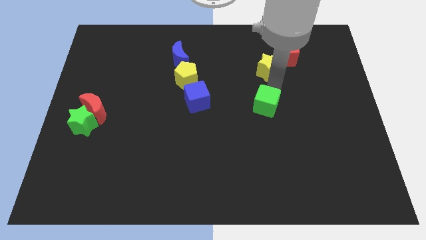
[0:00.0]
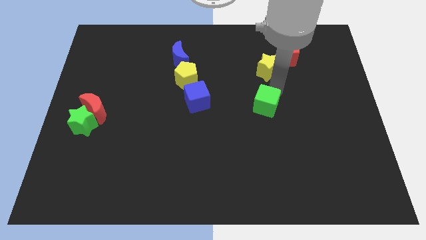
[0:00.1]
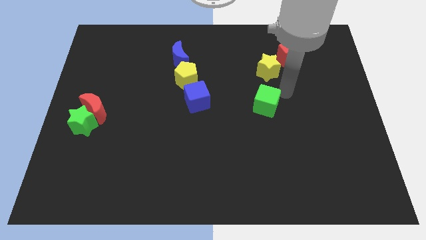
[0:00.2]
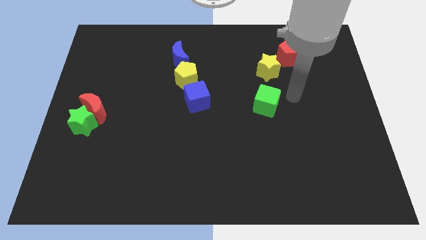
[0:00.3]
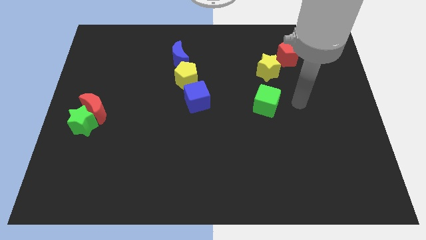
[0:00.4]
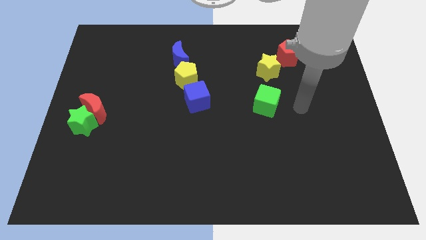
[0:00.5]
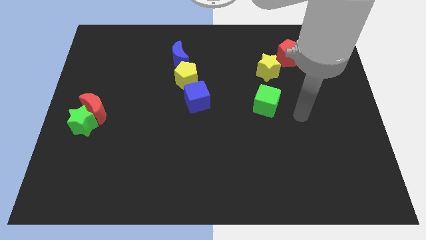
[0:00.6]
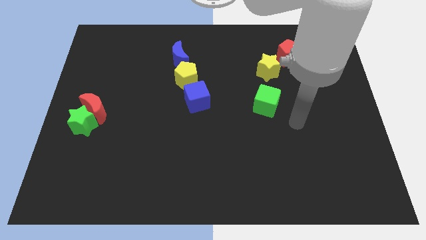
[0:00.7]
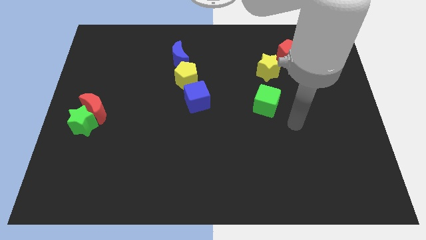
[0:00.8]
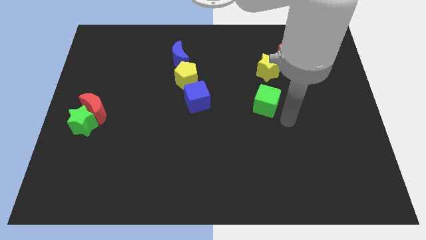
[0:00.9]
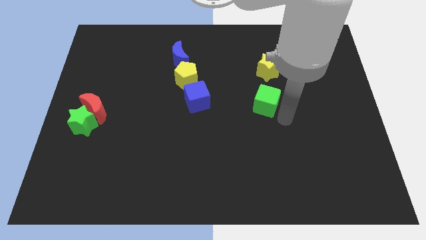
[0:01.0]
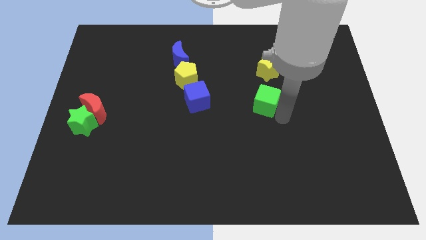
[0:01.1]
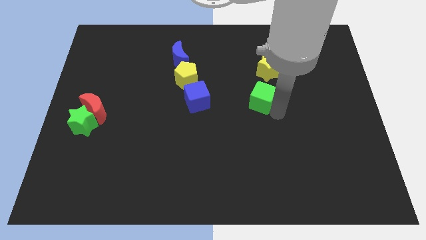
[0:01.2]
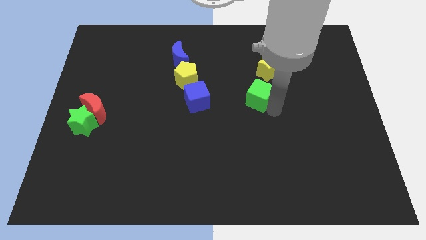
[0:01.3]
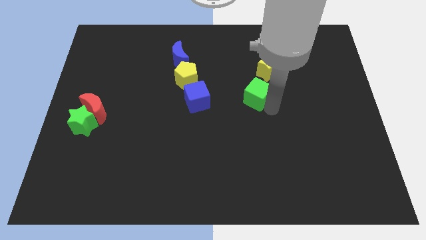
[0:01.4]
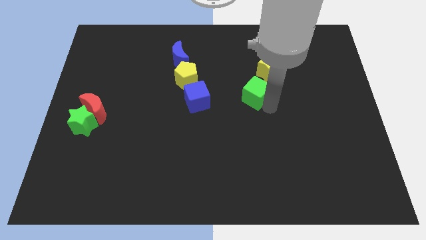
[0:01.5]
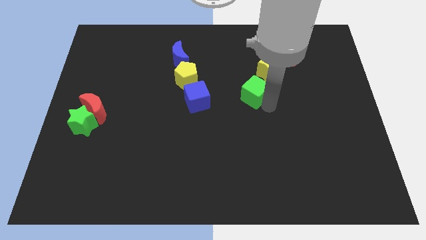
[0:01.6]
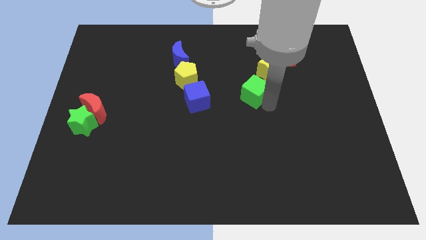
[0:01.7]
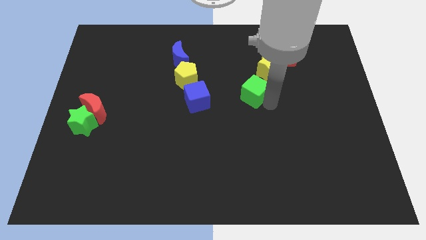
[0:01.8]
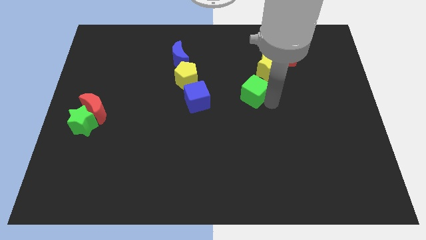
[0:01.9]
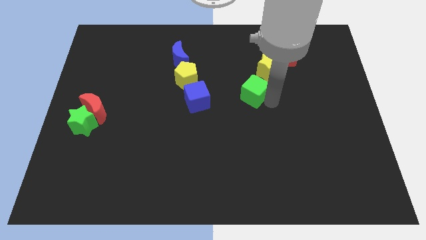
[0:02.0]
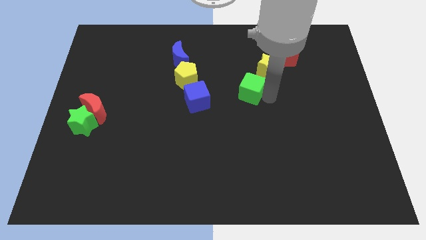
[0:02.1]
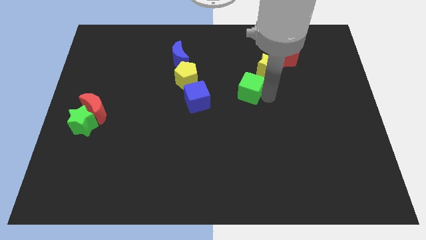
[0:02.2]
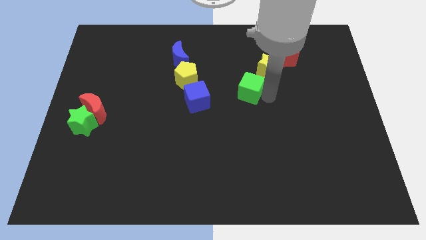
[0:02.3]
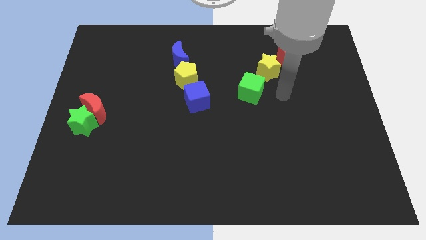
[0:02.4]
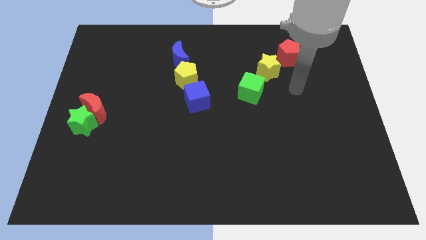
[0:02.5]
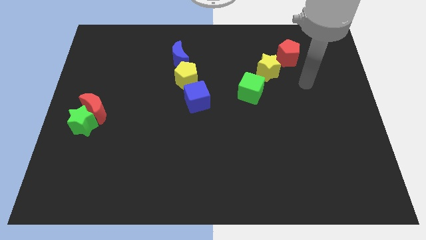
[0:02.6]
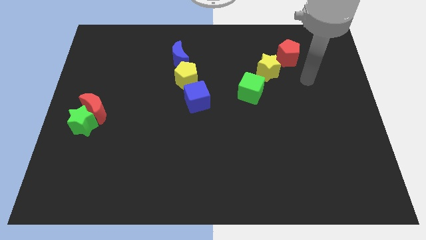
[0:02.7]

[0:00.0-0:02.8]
push the green cube close to the yellow star

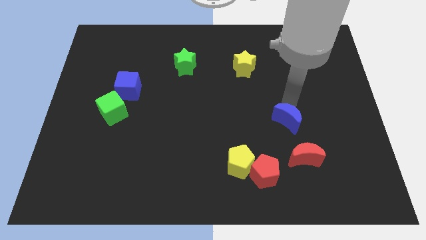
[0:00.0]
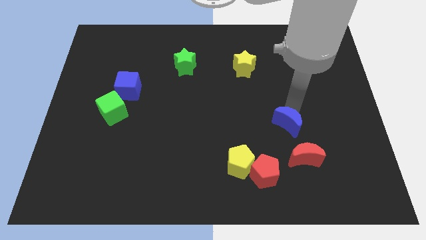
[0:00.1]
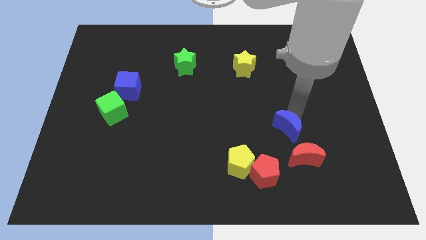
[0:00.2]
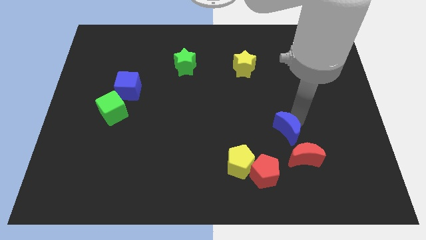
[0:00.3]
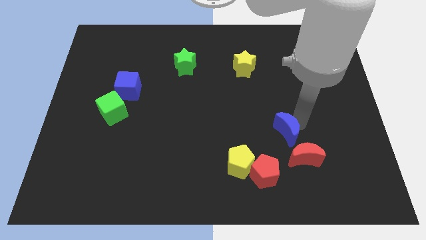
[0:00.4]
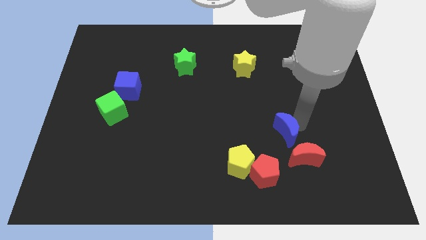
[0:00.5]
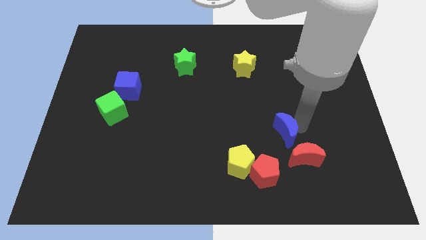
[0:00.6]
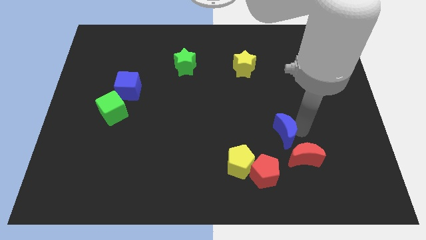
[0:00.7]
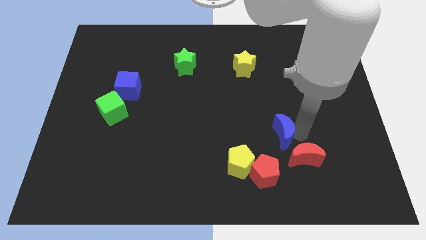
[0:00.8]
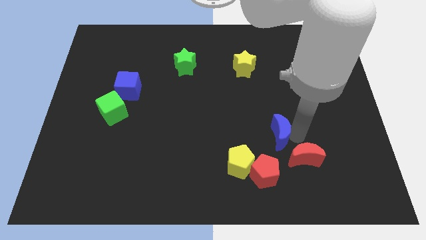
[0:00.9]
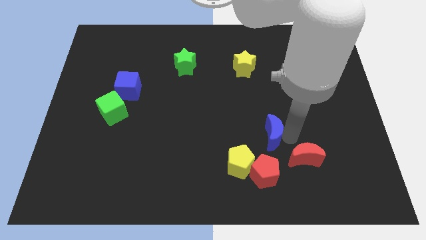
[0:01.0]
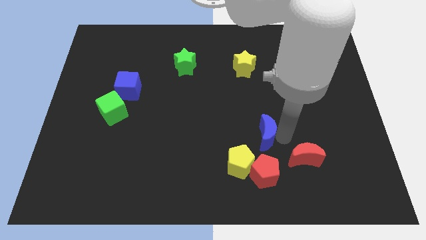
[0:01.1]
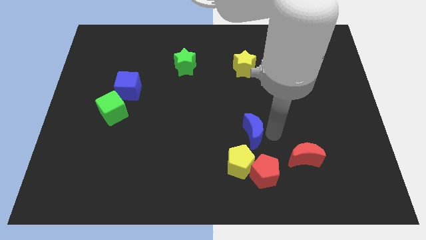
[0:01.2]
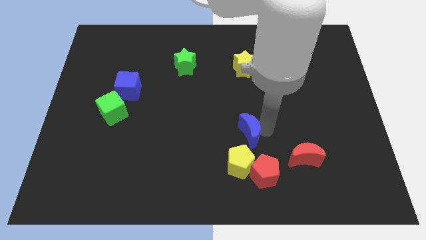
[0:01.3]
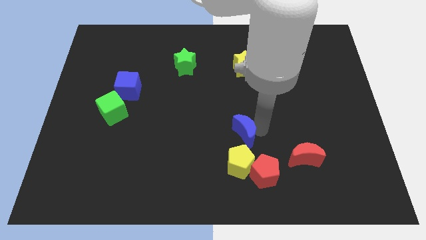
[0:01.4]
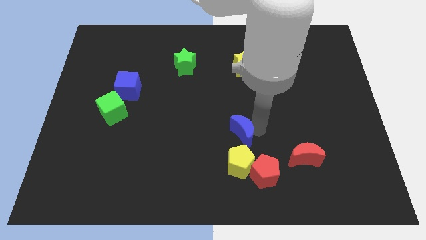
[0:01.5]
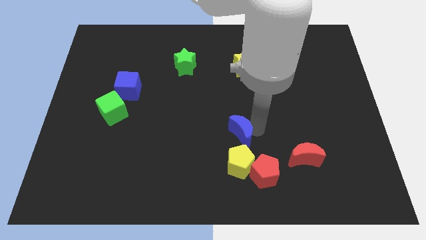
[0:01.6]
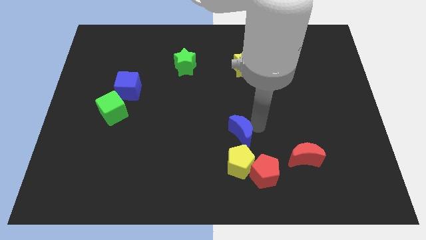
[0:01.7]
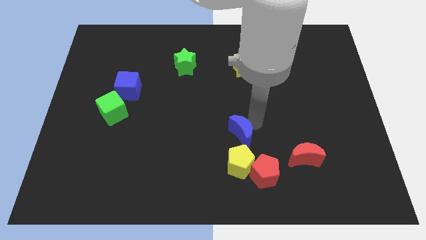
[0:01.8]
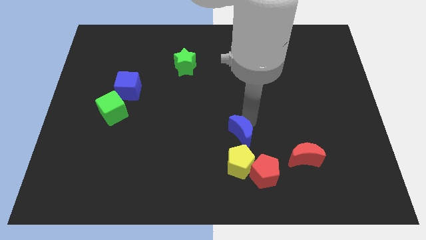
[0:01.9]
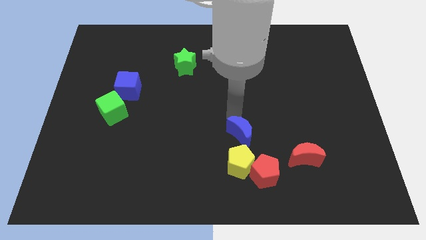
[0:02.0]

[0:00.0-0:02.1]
place the blue crescent above the yellow pentagon

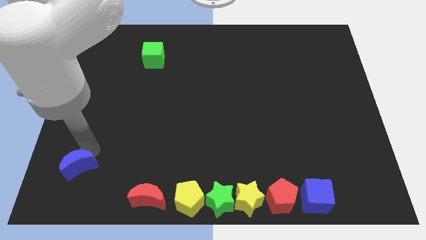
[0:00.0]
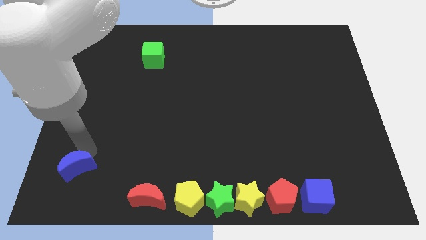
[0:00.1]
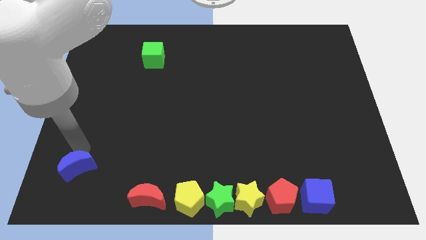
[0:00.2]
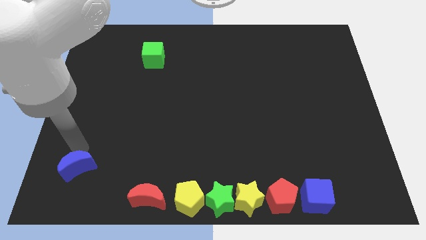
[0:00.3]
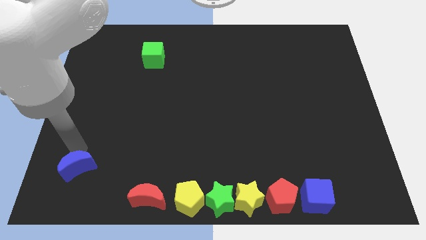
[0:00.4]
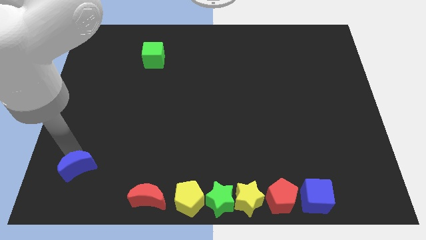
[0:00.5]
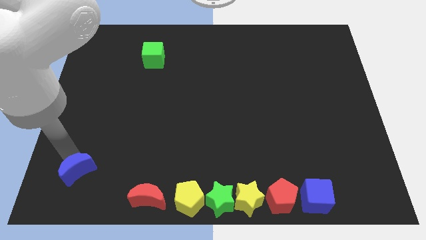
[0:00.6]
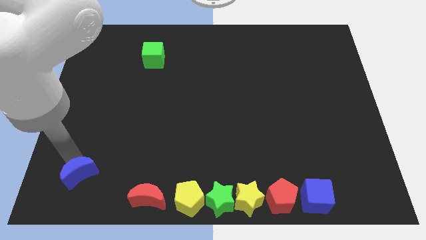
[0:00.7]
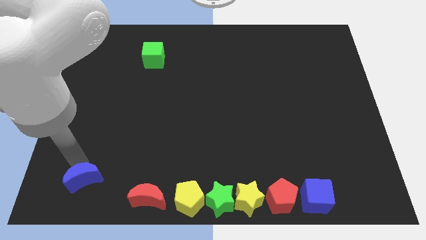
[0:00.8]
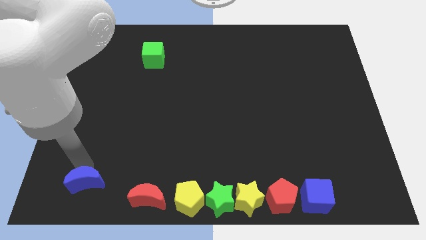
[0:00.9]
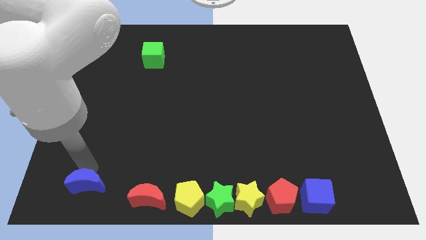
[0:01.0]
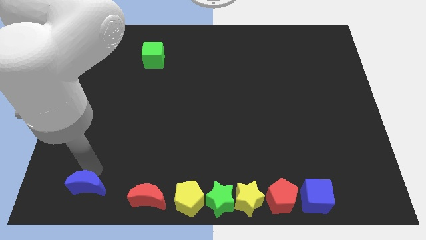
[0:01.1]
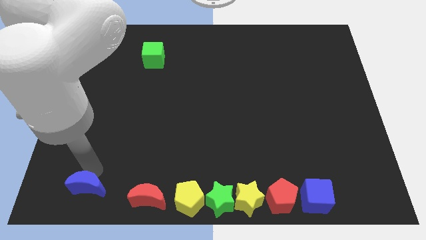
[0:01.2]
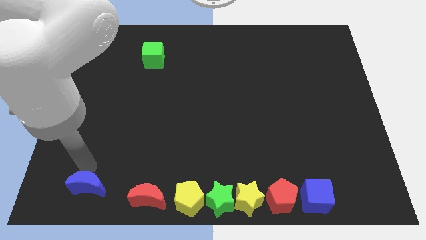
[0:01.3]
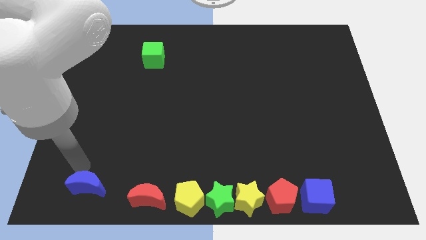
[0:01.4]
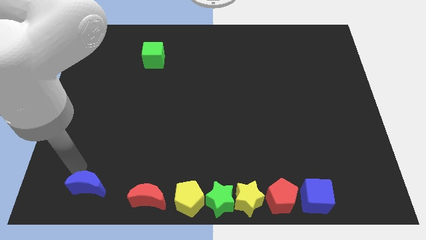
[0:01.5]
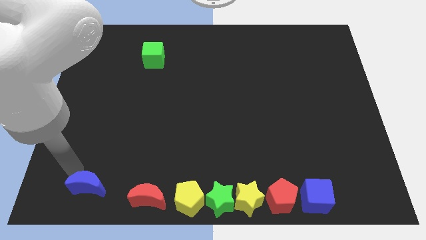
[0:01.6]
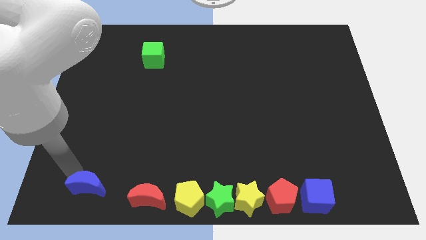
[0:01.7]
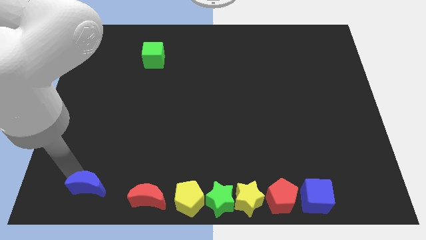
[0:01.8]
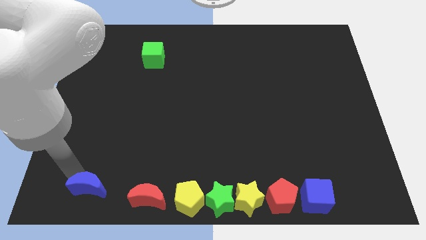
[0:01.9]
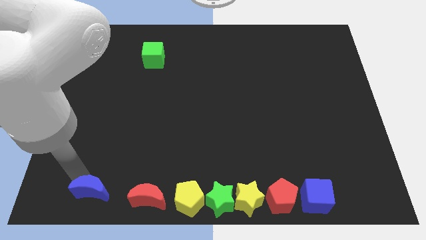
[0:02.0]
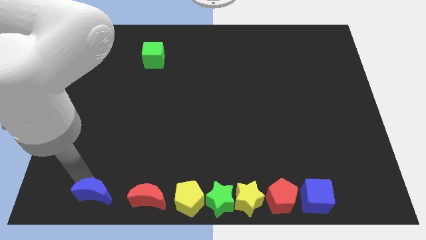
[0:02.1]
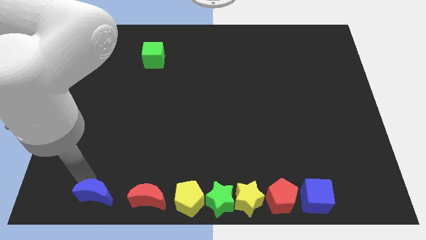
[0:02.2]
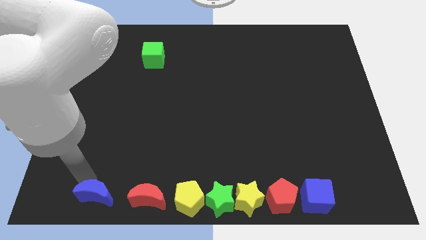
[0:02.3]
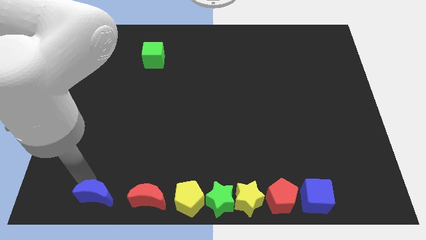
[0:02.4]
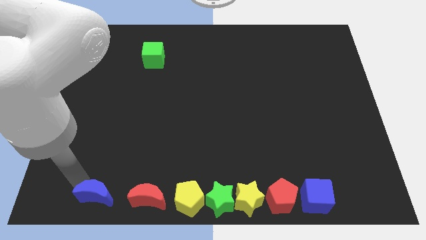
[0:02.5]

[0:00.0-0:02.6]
move the blue moon left to the red moon

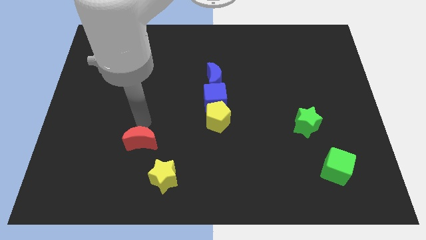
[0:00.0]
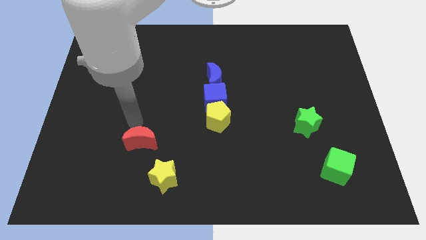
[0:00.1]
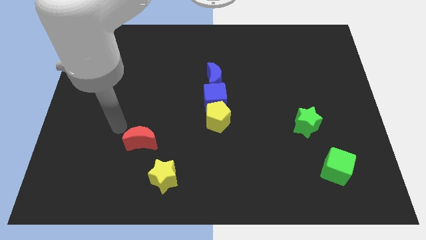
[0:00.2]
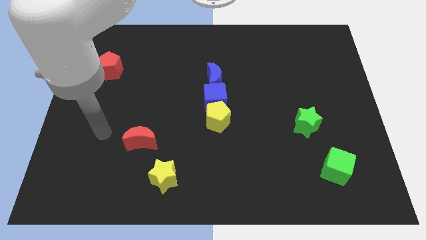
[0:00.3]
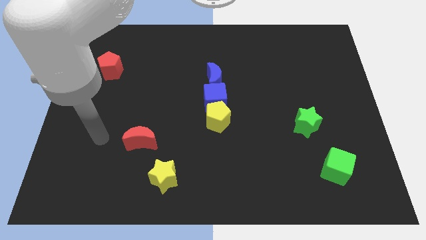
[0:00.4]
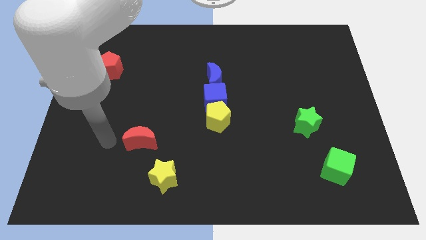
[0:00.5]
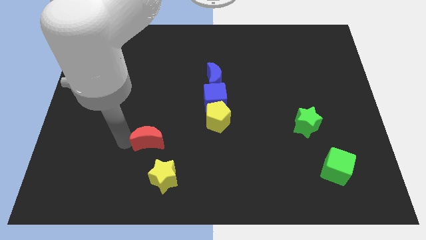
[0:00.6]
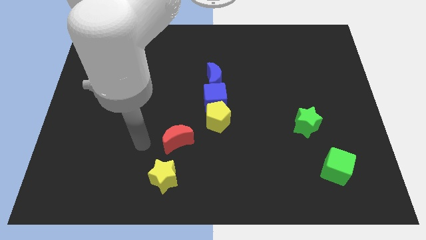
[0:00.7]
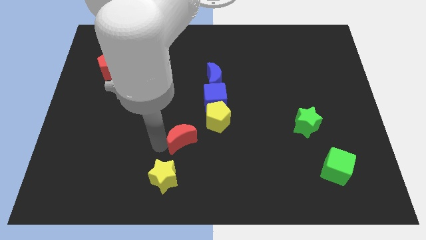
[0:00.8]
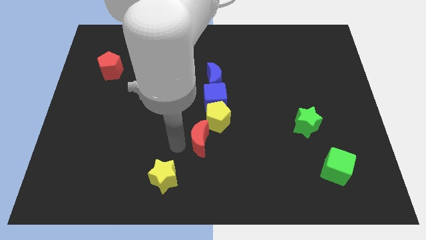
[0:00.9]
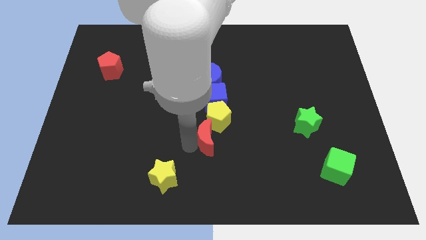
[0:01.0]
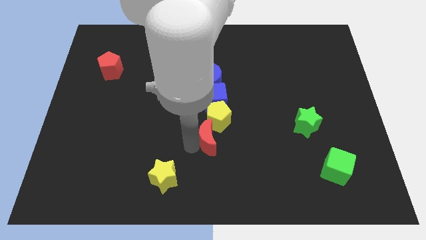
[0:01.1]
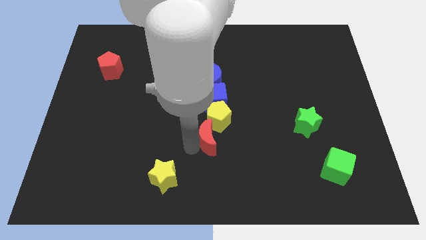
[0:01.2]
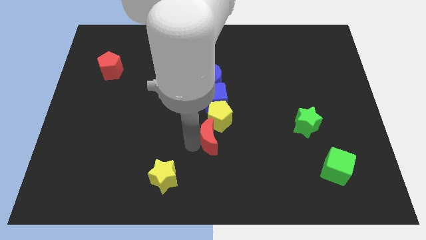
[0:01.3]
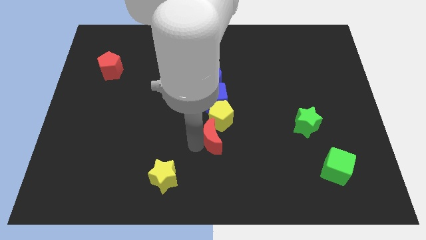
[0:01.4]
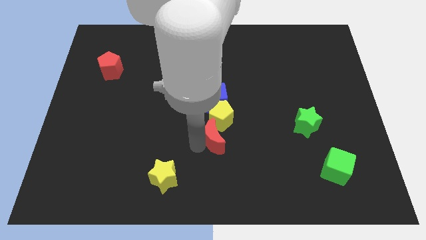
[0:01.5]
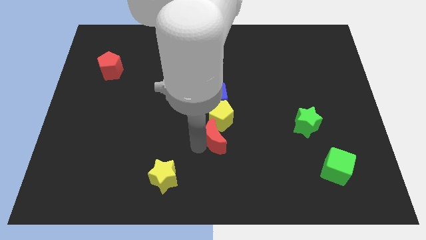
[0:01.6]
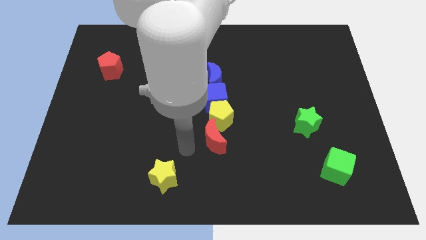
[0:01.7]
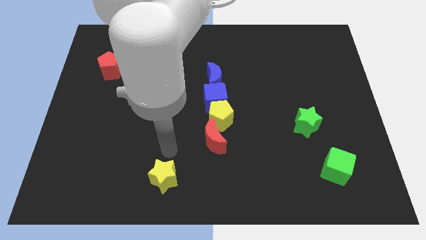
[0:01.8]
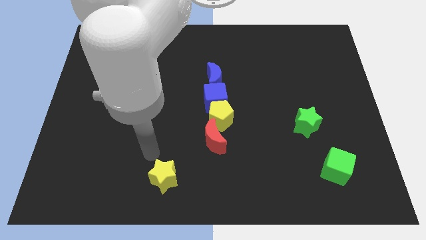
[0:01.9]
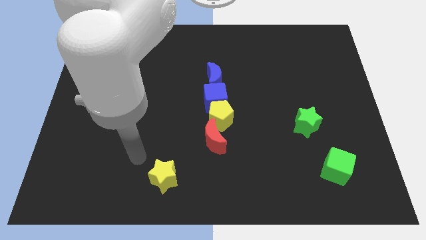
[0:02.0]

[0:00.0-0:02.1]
push the red moon below yellow pentagon
